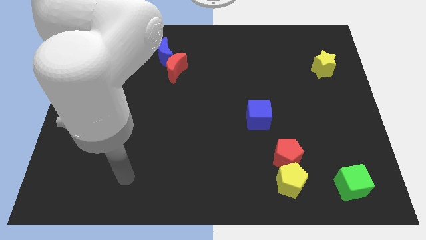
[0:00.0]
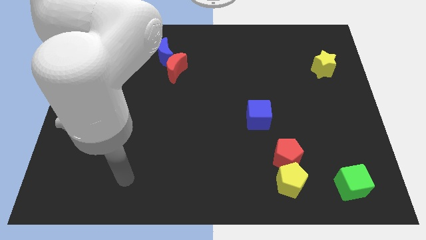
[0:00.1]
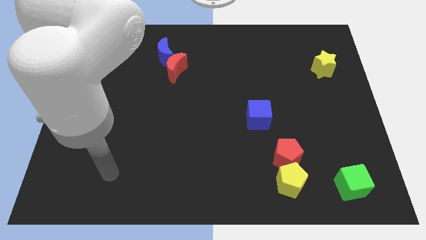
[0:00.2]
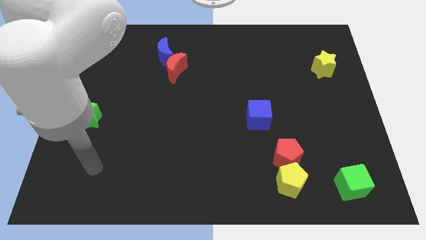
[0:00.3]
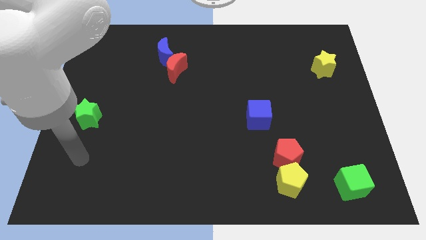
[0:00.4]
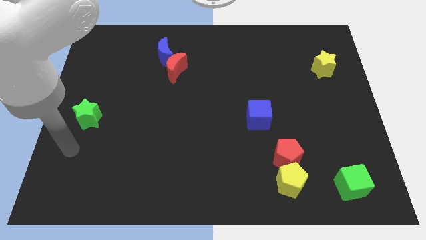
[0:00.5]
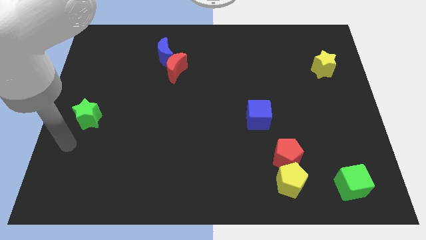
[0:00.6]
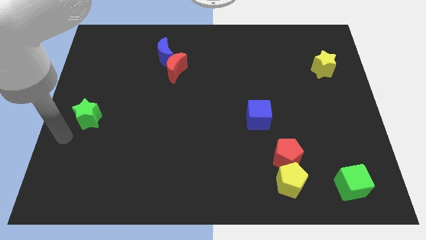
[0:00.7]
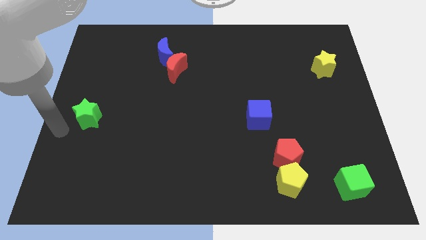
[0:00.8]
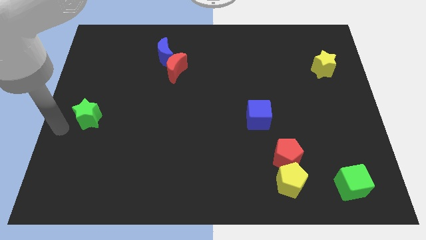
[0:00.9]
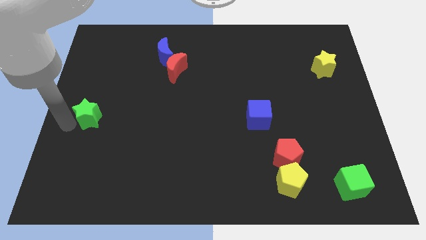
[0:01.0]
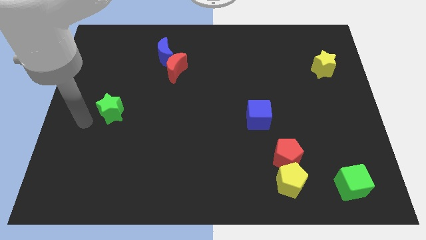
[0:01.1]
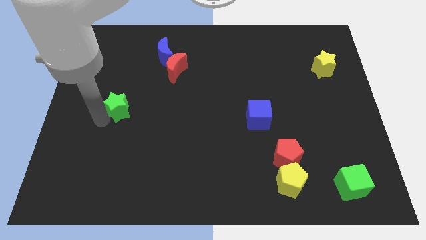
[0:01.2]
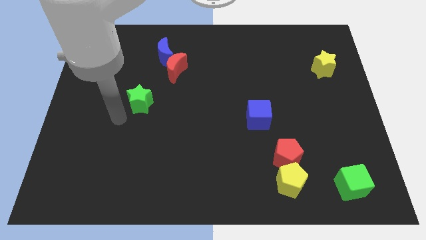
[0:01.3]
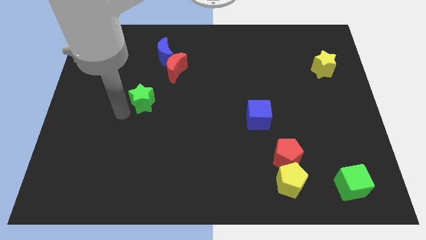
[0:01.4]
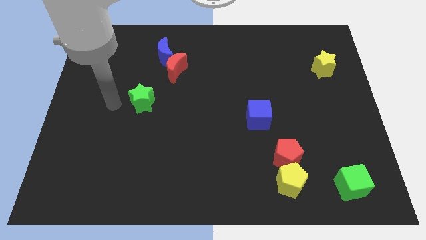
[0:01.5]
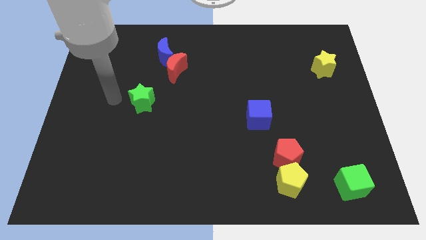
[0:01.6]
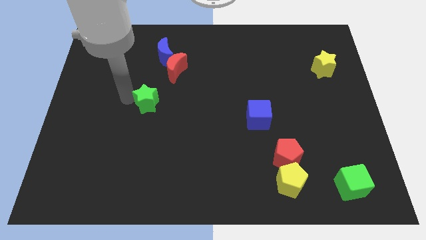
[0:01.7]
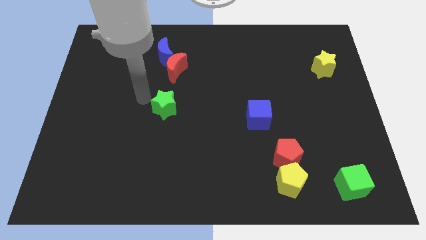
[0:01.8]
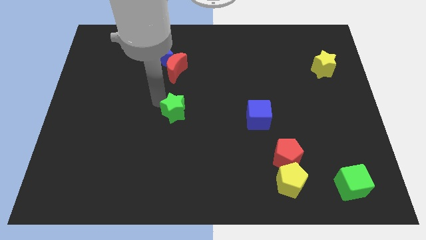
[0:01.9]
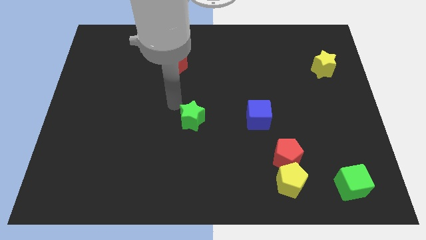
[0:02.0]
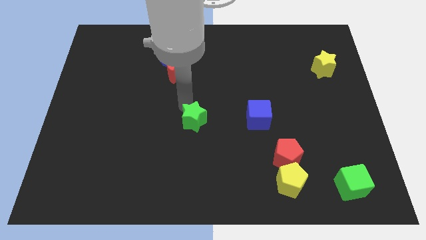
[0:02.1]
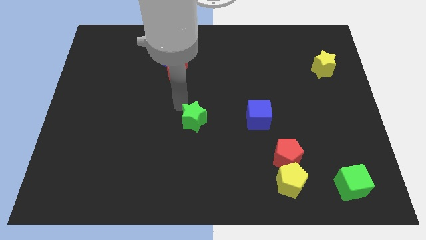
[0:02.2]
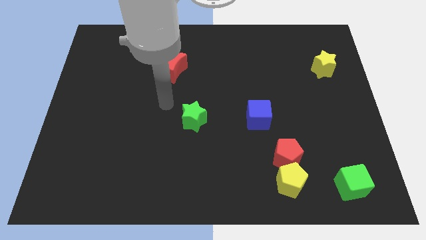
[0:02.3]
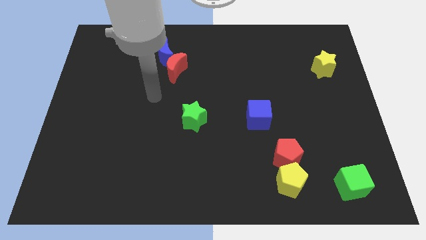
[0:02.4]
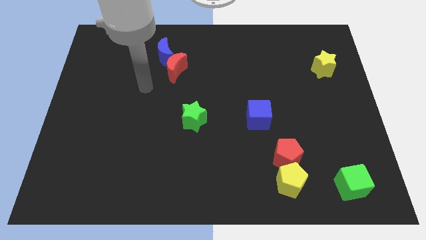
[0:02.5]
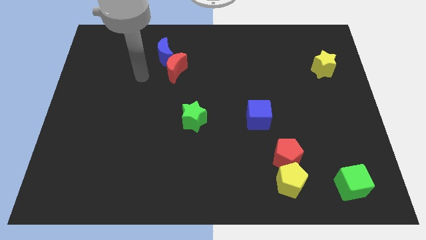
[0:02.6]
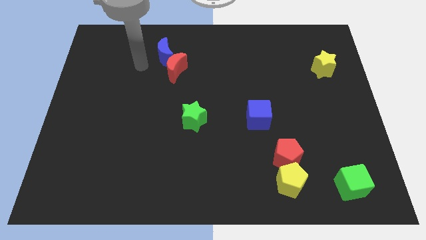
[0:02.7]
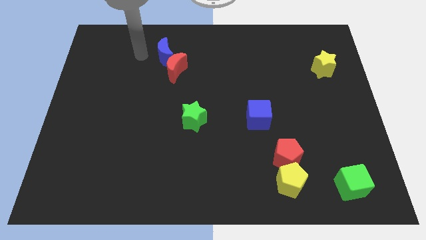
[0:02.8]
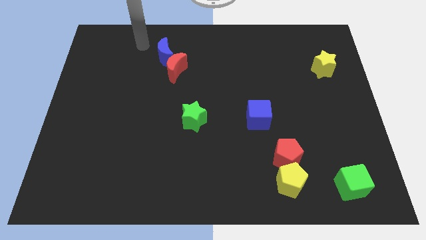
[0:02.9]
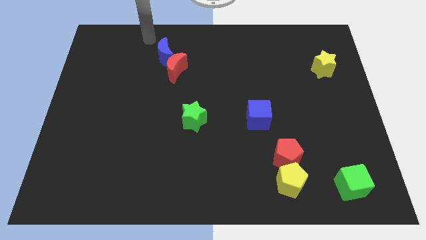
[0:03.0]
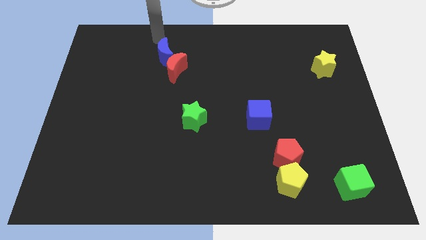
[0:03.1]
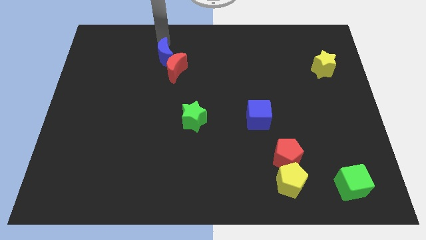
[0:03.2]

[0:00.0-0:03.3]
drag the green star diagonally bottom right to the red moon

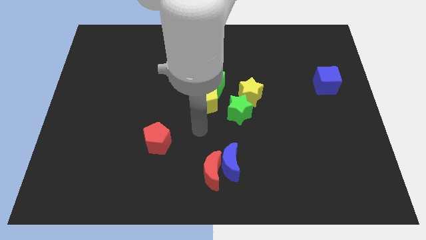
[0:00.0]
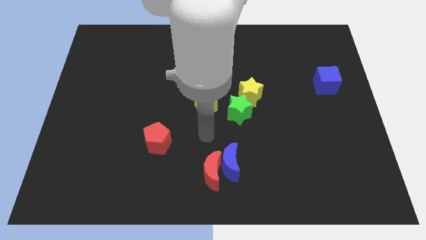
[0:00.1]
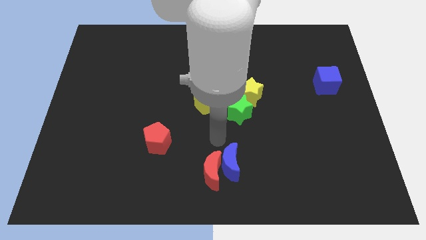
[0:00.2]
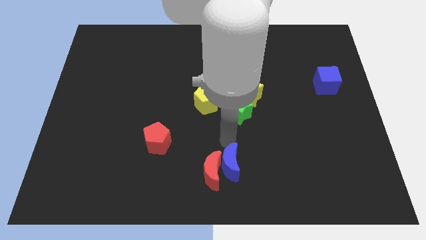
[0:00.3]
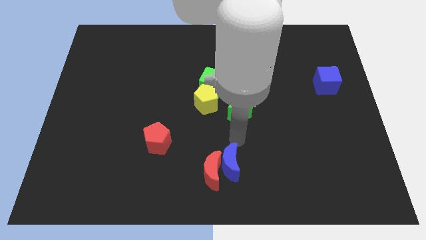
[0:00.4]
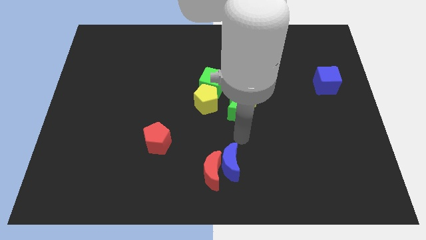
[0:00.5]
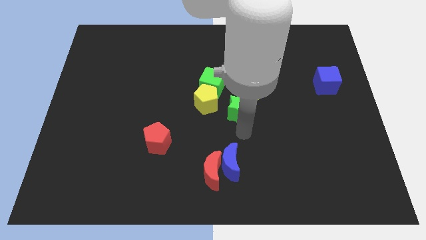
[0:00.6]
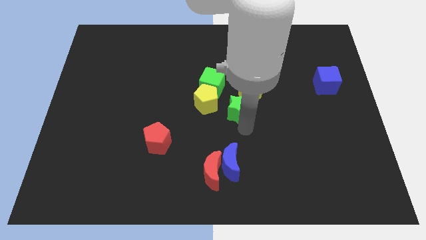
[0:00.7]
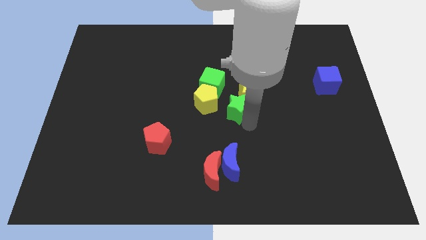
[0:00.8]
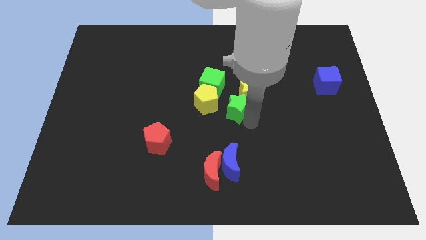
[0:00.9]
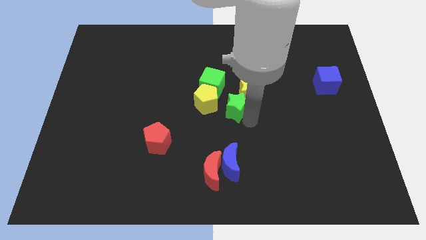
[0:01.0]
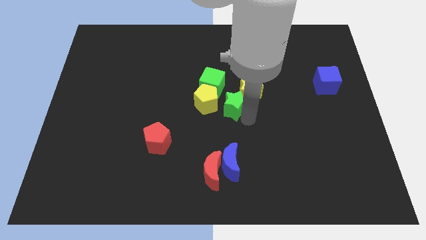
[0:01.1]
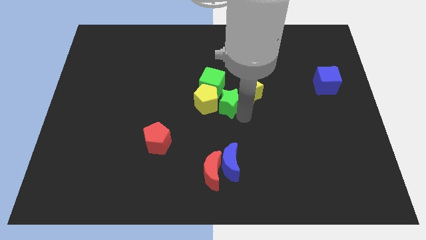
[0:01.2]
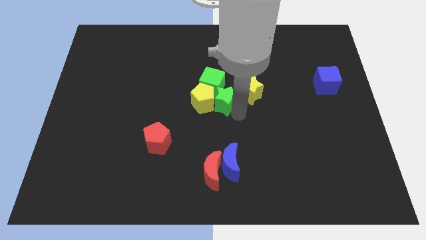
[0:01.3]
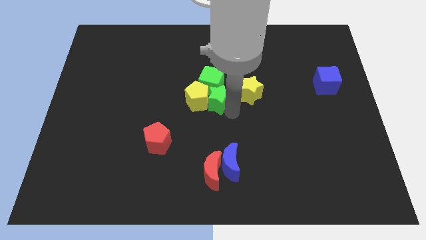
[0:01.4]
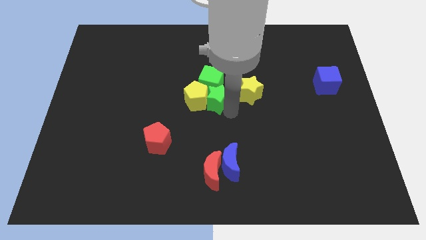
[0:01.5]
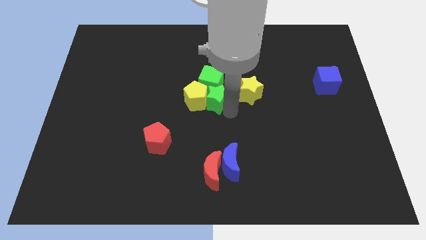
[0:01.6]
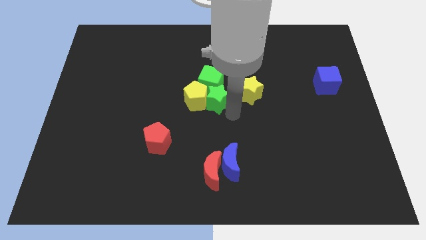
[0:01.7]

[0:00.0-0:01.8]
slide the green star into the green cube and yellow pentagon

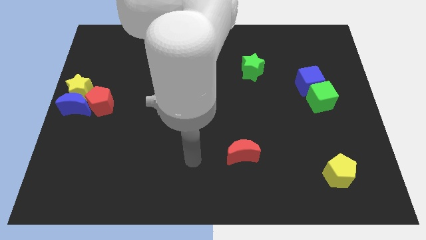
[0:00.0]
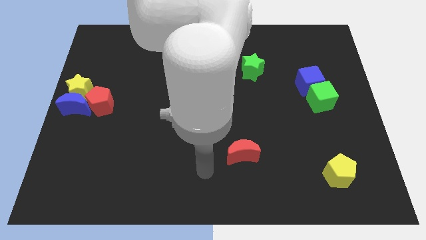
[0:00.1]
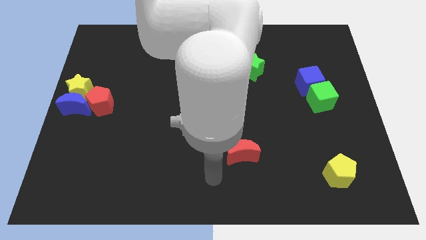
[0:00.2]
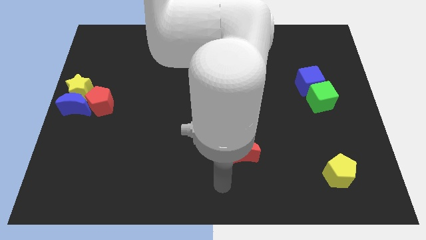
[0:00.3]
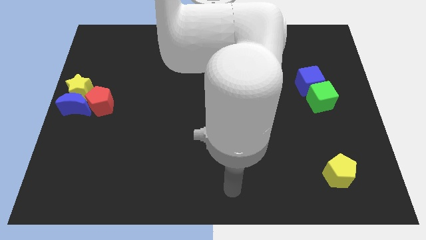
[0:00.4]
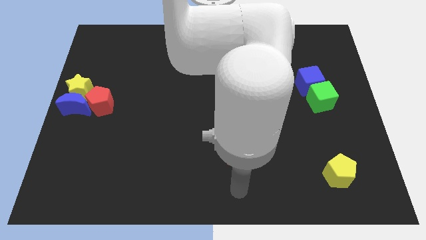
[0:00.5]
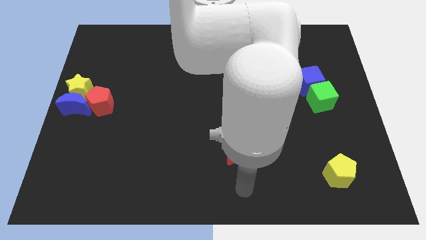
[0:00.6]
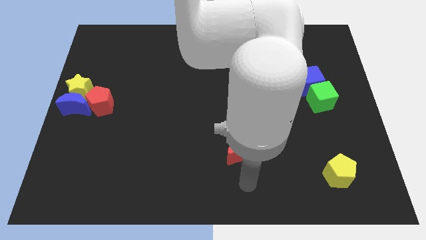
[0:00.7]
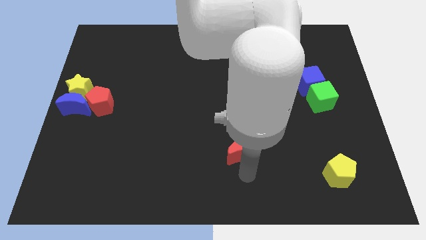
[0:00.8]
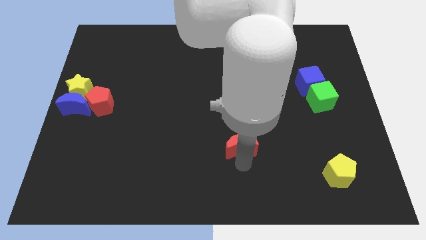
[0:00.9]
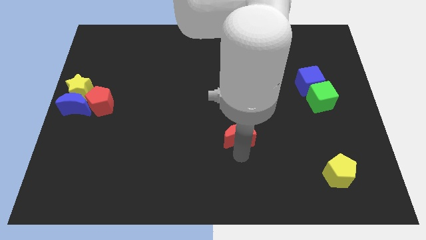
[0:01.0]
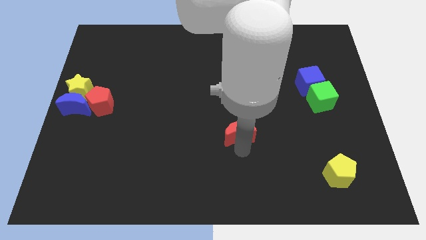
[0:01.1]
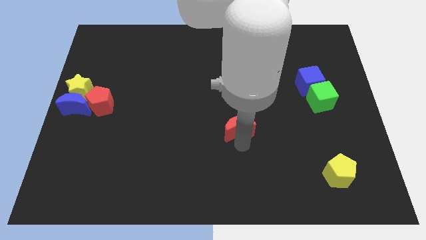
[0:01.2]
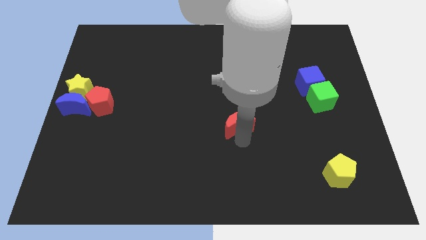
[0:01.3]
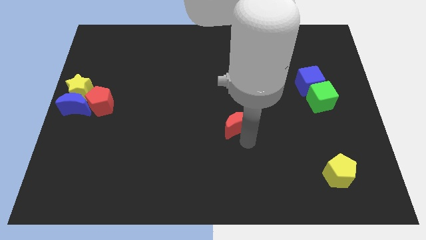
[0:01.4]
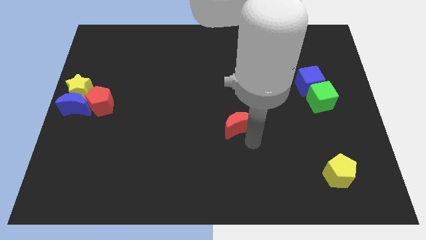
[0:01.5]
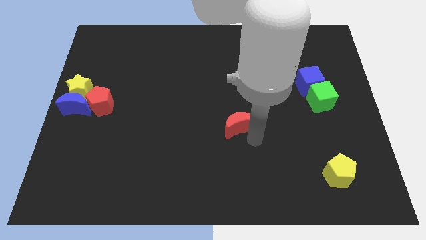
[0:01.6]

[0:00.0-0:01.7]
push the red moon towards up

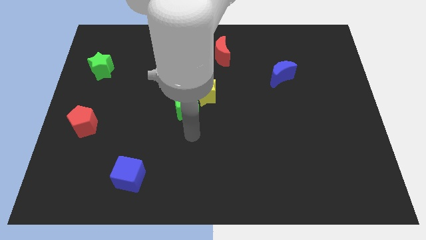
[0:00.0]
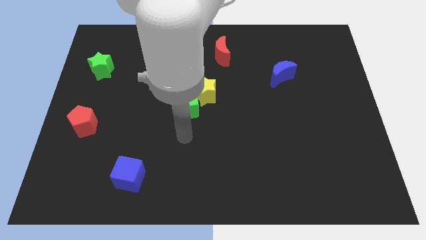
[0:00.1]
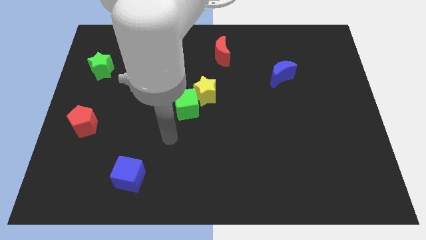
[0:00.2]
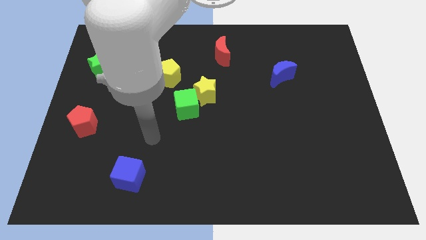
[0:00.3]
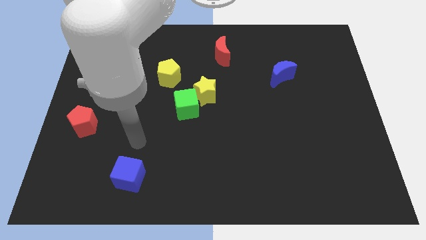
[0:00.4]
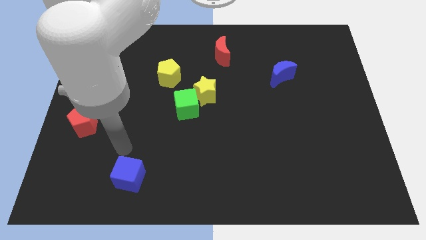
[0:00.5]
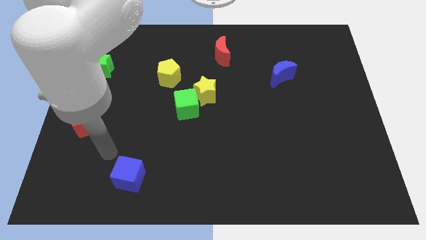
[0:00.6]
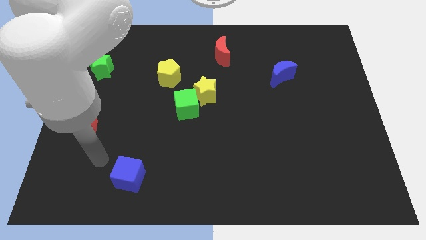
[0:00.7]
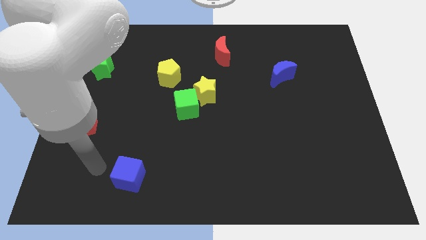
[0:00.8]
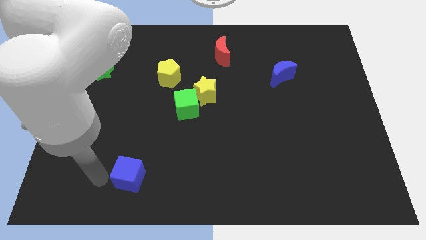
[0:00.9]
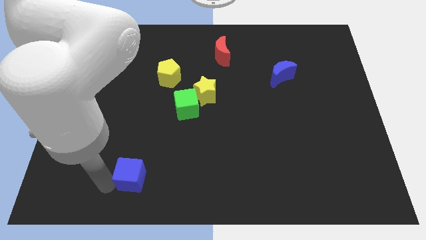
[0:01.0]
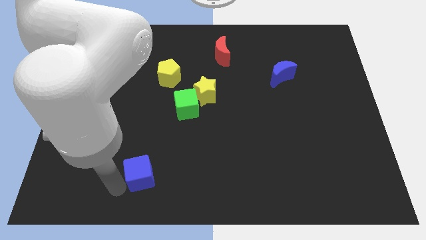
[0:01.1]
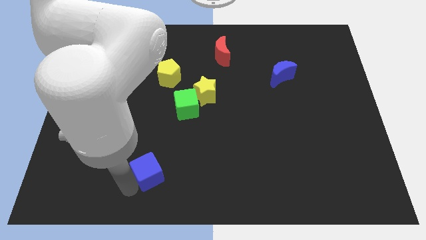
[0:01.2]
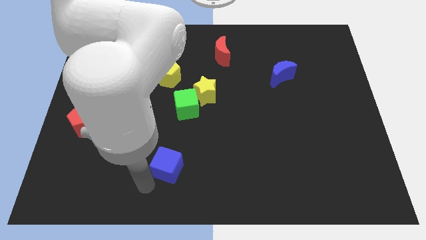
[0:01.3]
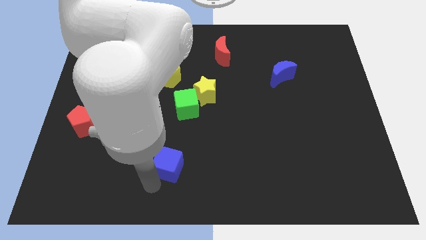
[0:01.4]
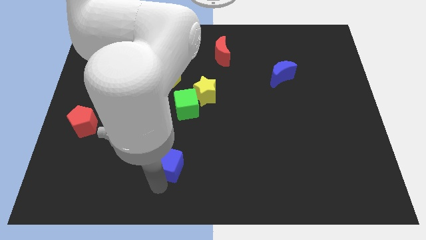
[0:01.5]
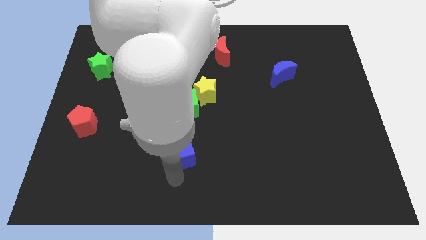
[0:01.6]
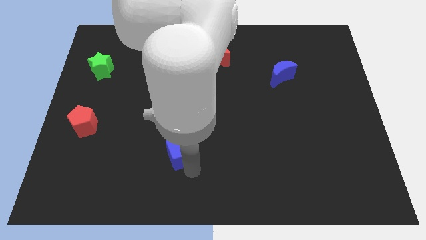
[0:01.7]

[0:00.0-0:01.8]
move the blue cube towards the green cube

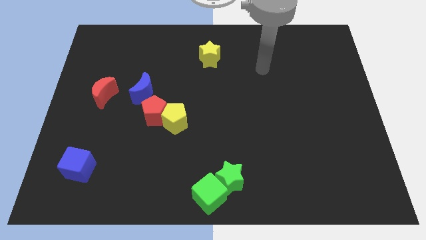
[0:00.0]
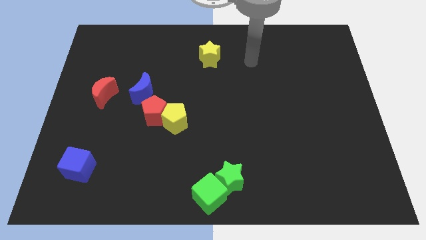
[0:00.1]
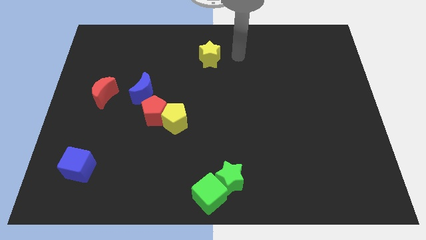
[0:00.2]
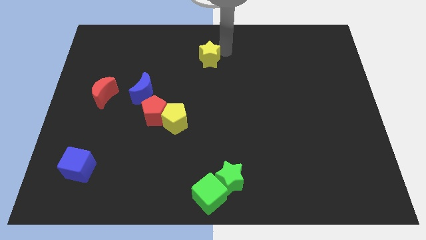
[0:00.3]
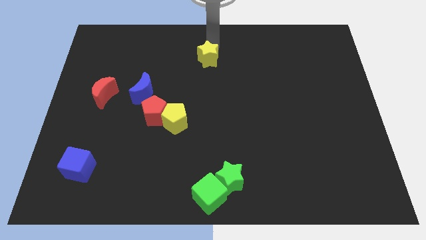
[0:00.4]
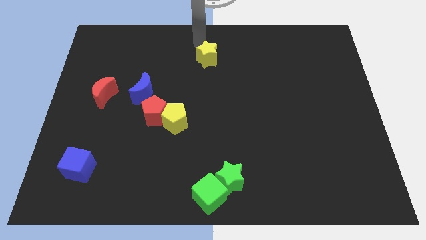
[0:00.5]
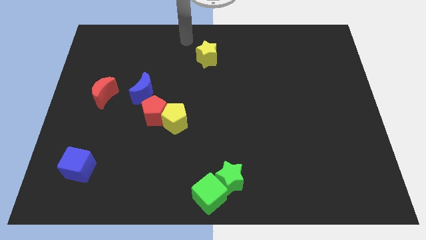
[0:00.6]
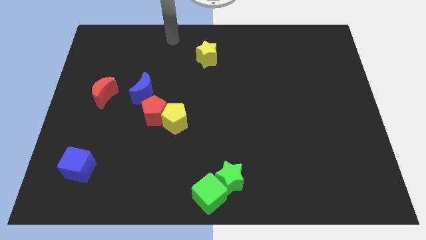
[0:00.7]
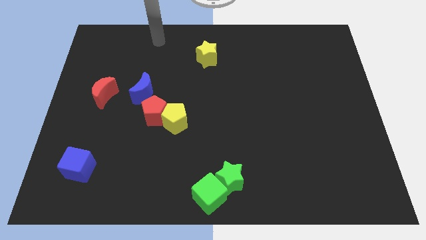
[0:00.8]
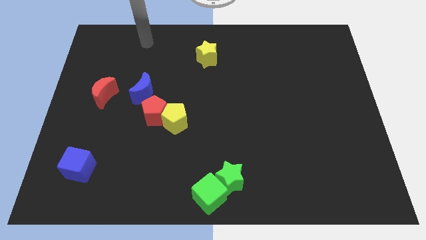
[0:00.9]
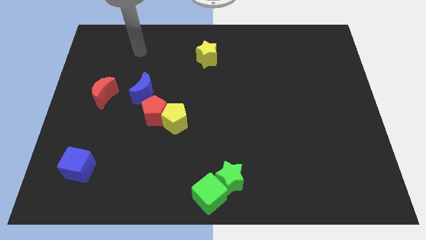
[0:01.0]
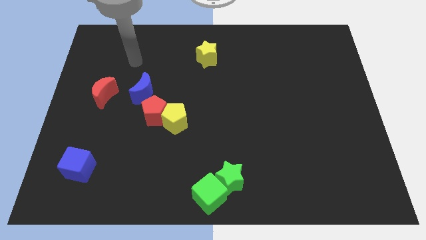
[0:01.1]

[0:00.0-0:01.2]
slightly push the green star to the left side
